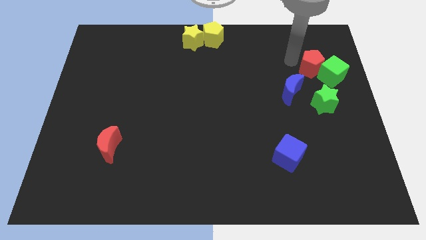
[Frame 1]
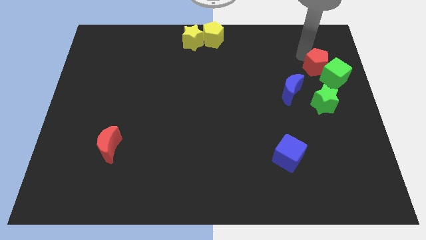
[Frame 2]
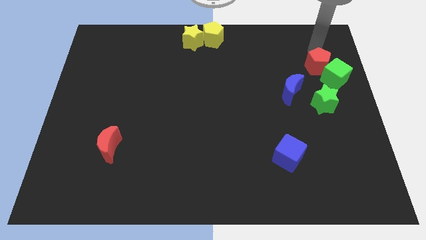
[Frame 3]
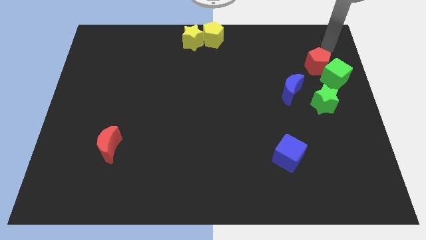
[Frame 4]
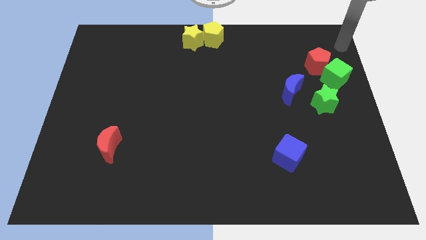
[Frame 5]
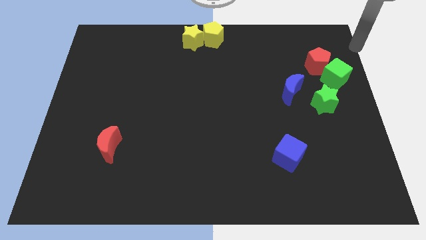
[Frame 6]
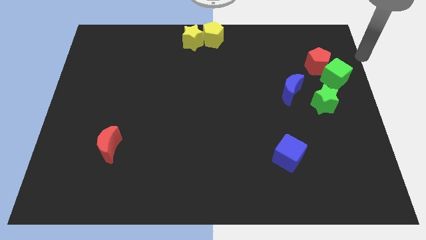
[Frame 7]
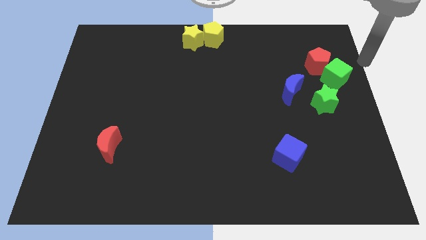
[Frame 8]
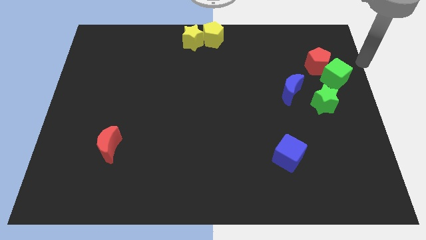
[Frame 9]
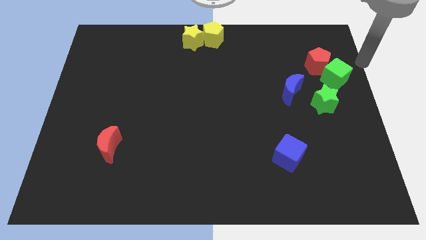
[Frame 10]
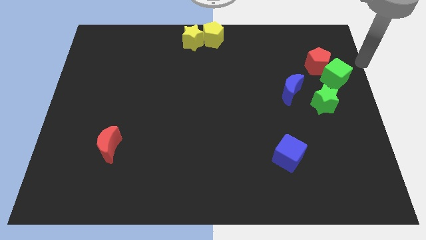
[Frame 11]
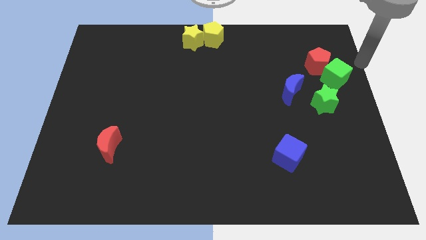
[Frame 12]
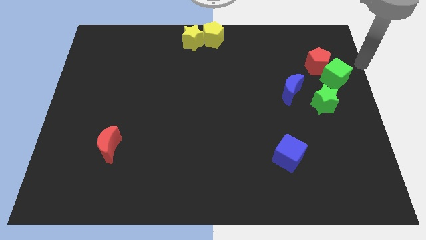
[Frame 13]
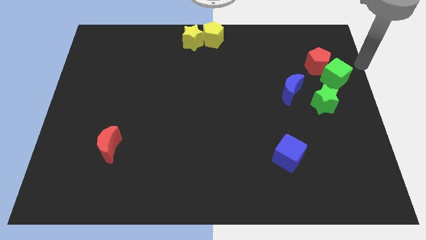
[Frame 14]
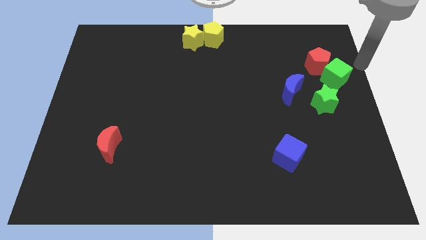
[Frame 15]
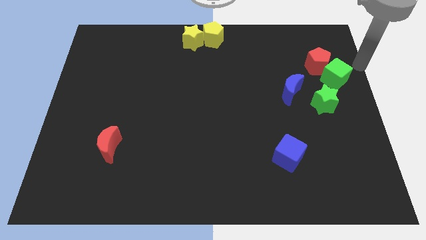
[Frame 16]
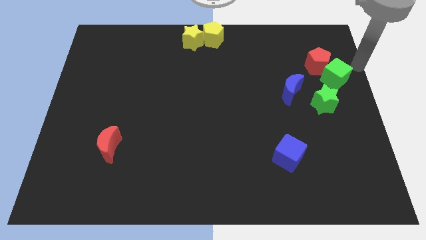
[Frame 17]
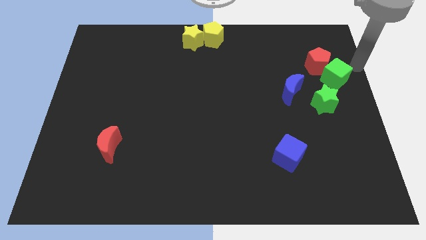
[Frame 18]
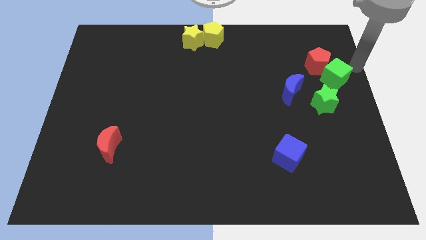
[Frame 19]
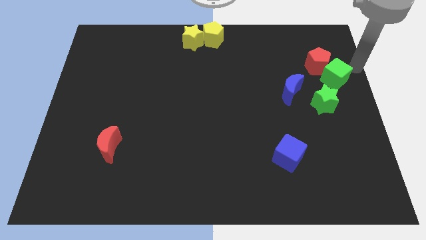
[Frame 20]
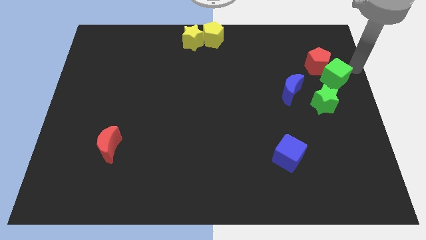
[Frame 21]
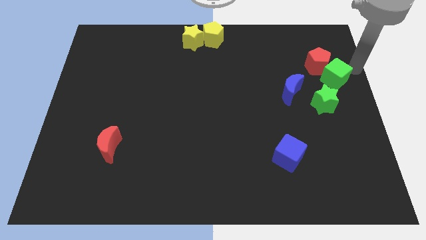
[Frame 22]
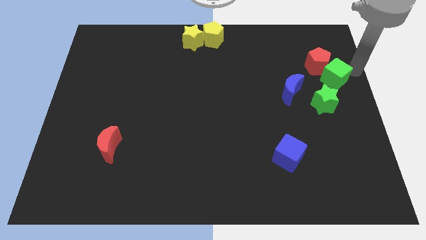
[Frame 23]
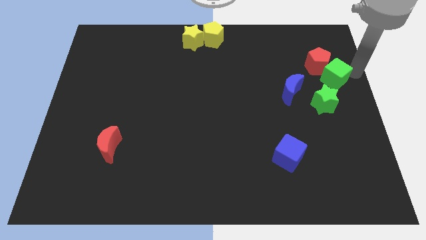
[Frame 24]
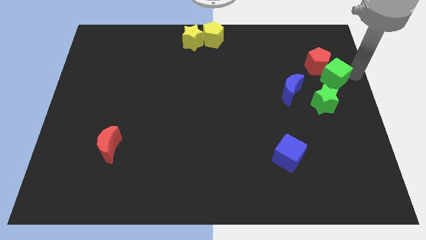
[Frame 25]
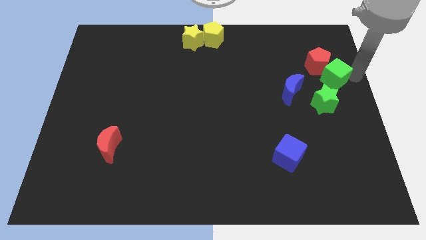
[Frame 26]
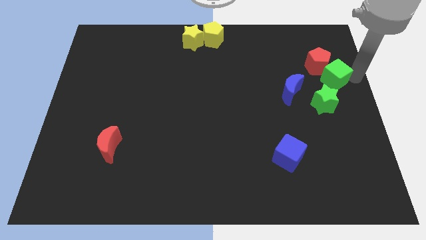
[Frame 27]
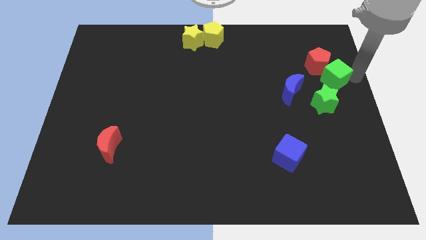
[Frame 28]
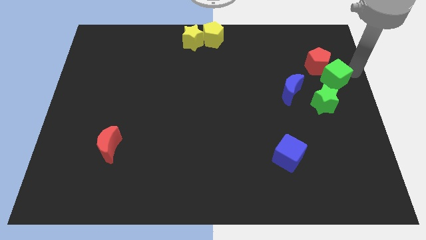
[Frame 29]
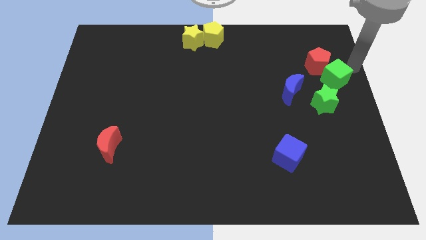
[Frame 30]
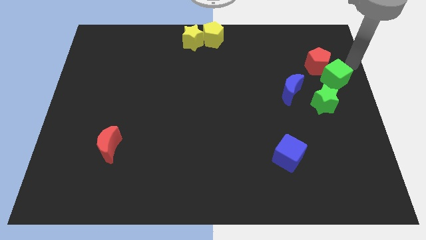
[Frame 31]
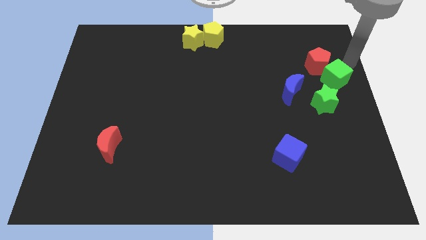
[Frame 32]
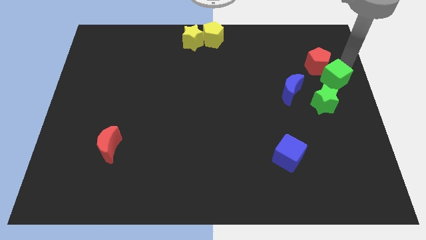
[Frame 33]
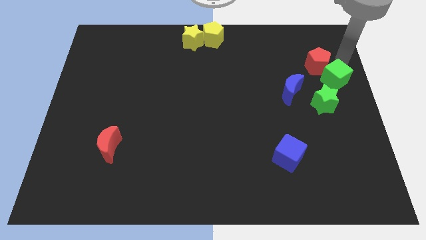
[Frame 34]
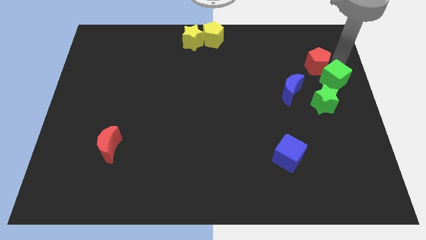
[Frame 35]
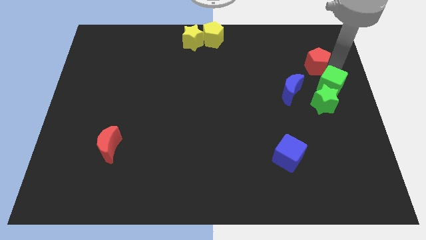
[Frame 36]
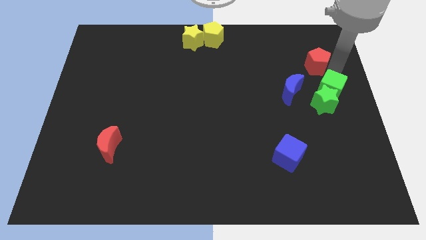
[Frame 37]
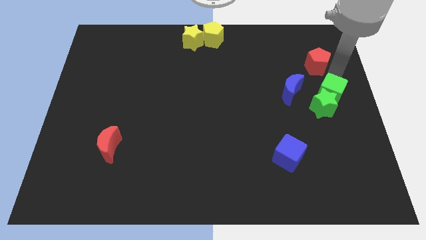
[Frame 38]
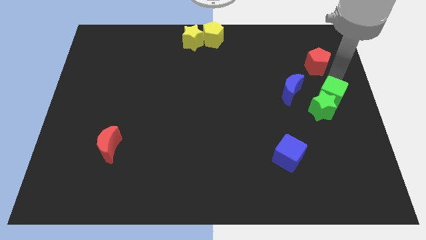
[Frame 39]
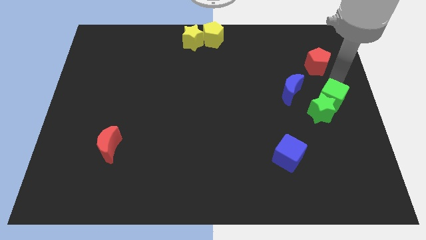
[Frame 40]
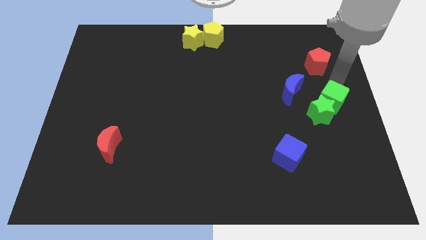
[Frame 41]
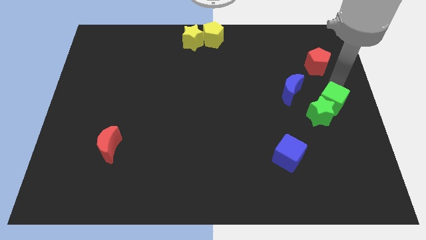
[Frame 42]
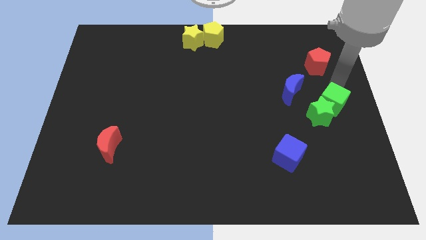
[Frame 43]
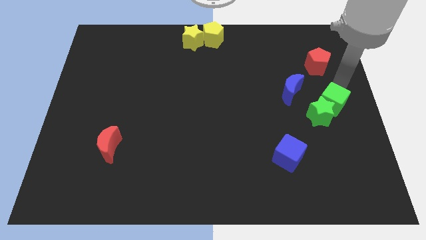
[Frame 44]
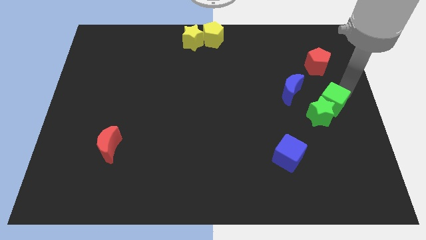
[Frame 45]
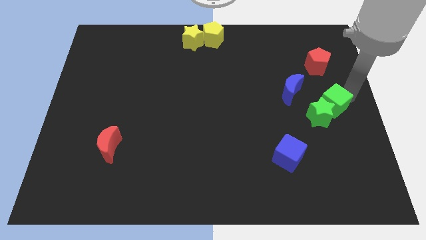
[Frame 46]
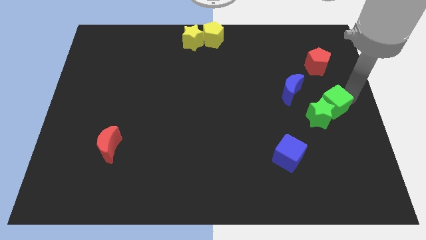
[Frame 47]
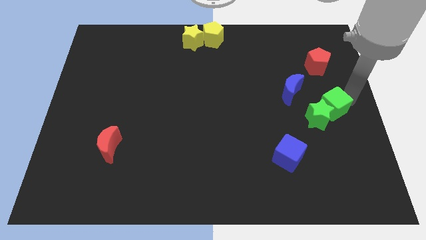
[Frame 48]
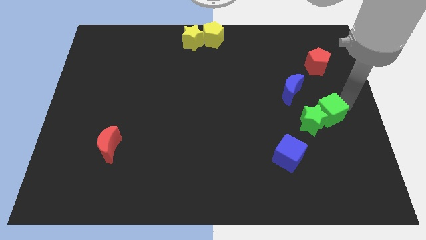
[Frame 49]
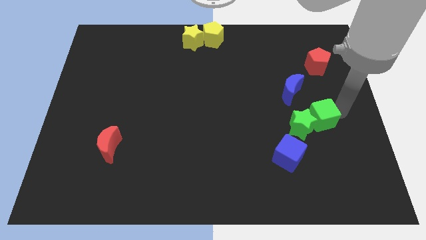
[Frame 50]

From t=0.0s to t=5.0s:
put the green cube into the green star

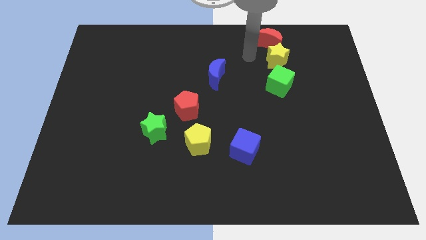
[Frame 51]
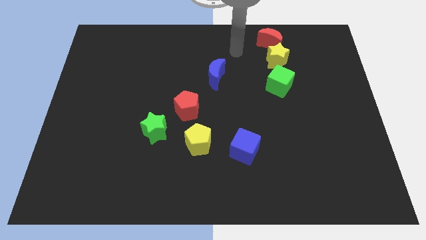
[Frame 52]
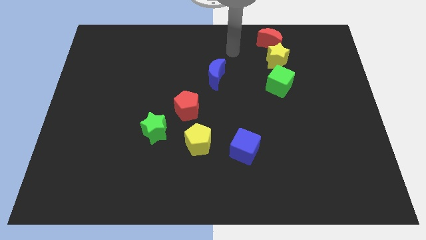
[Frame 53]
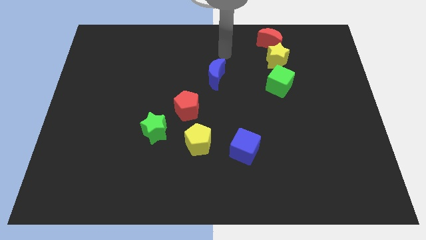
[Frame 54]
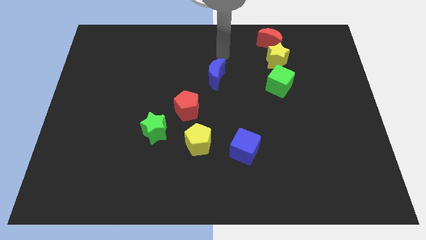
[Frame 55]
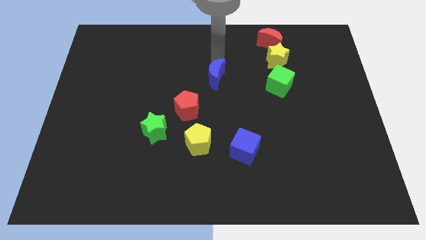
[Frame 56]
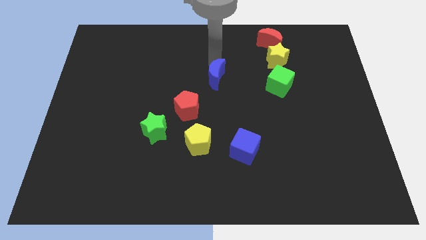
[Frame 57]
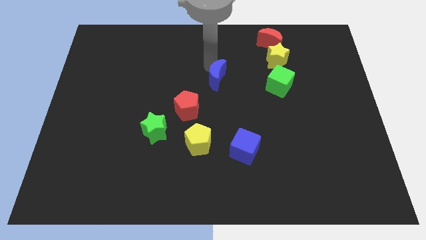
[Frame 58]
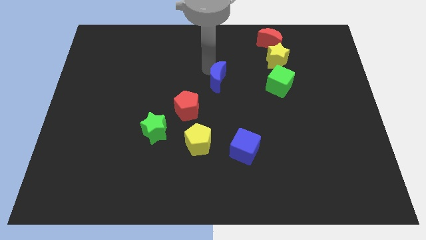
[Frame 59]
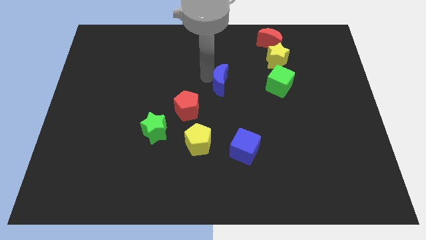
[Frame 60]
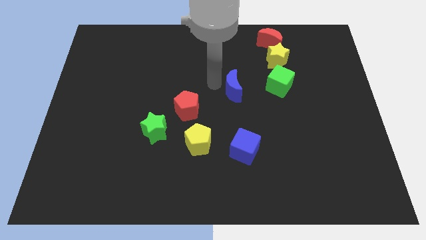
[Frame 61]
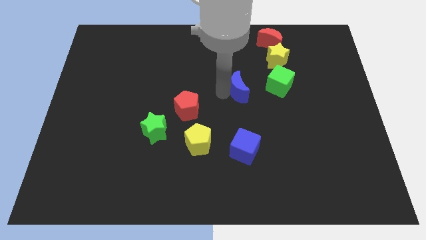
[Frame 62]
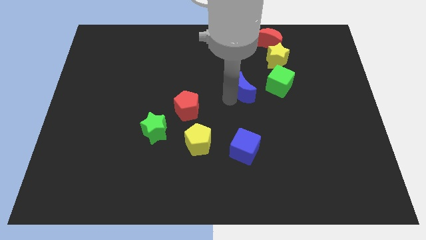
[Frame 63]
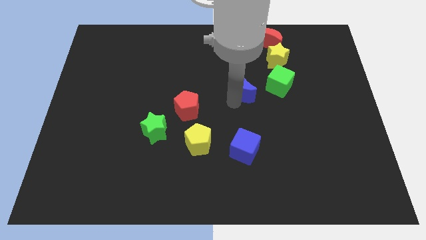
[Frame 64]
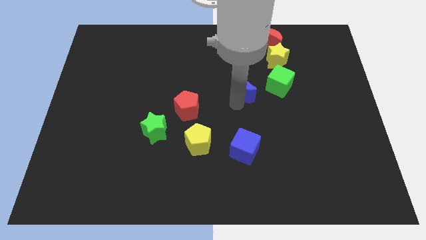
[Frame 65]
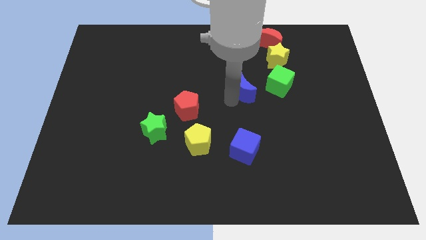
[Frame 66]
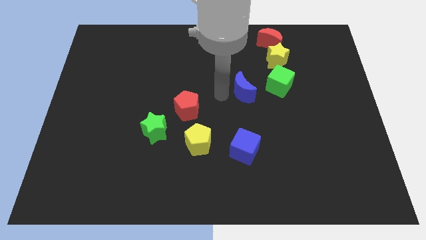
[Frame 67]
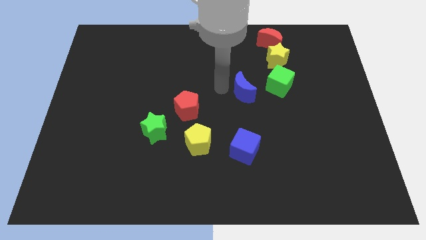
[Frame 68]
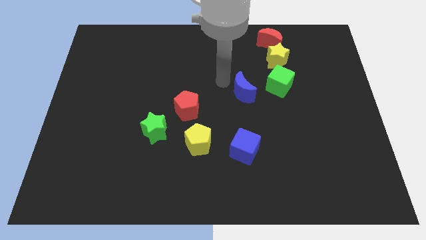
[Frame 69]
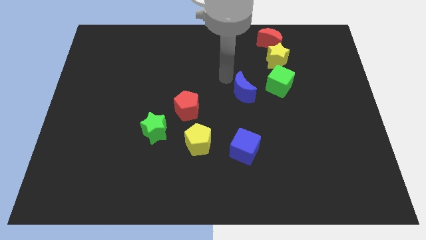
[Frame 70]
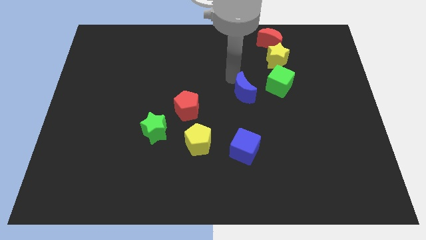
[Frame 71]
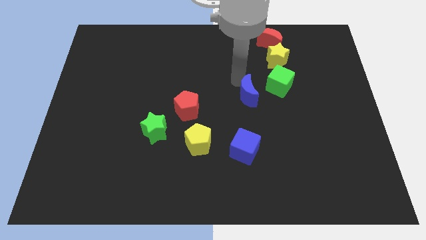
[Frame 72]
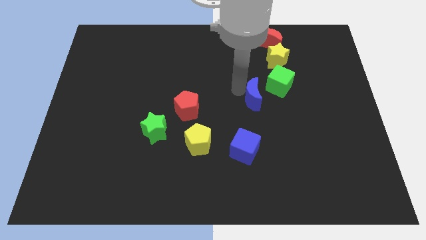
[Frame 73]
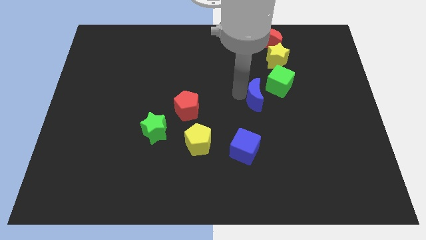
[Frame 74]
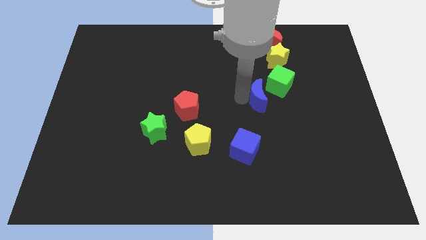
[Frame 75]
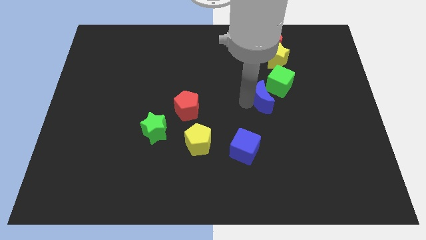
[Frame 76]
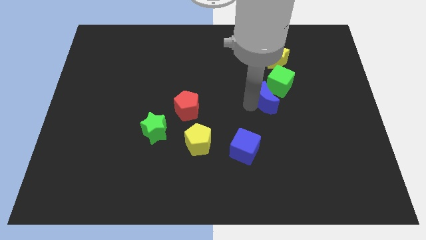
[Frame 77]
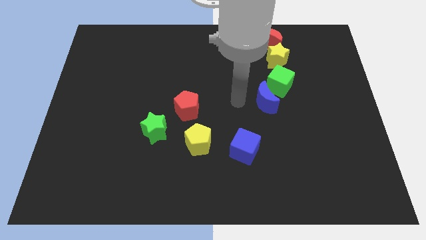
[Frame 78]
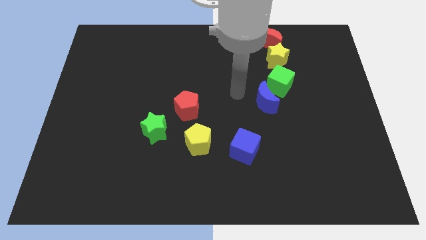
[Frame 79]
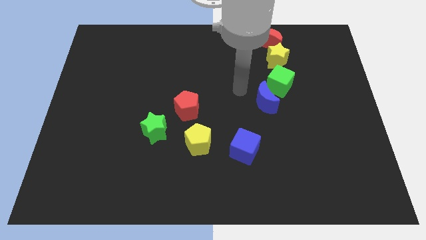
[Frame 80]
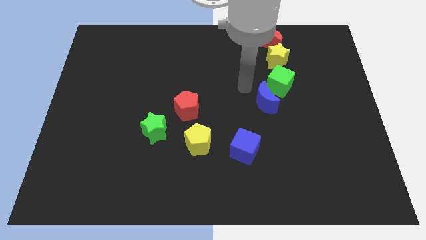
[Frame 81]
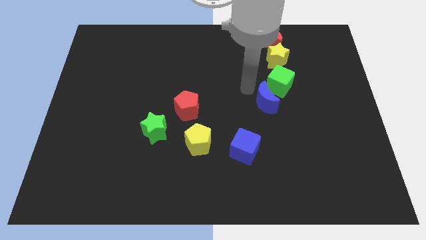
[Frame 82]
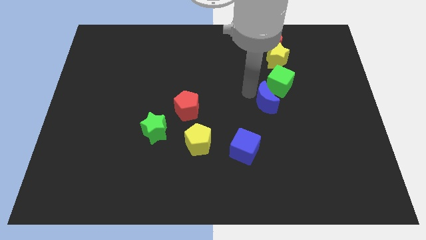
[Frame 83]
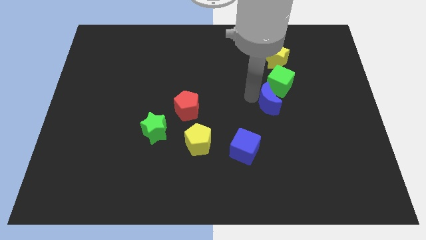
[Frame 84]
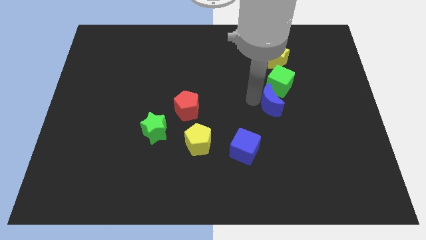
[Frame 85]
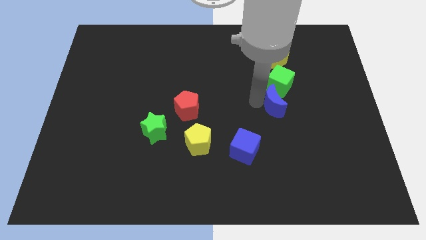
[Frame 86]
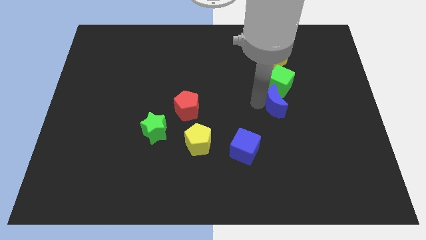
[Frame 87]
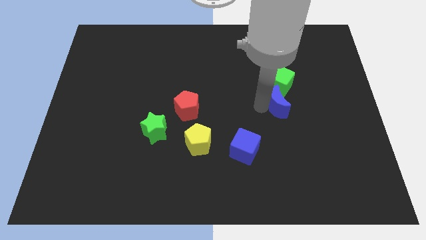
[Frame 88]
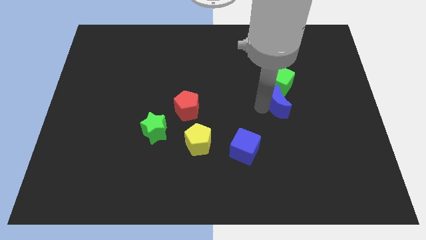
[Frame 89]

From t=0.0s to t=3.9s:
place the blue semicircle below the green cube
